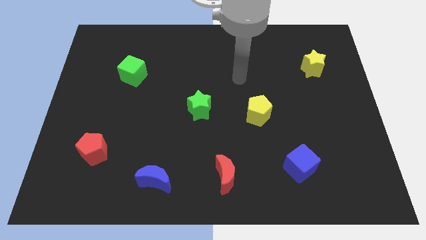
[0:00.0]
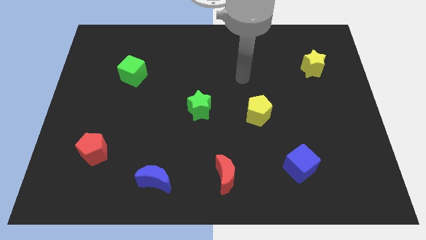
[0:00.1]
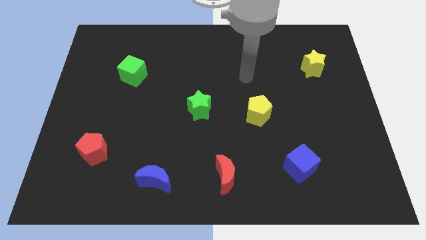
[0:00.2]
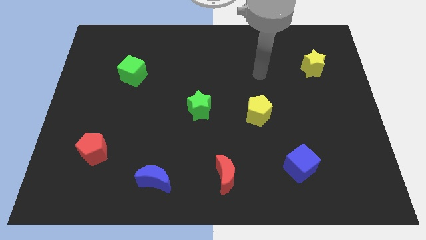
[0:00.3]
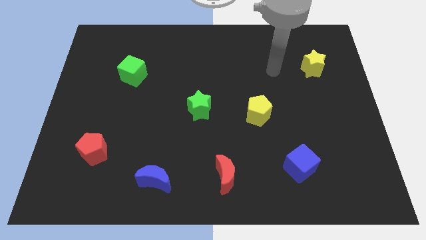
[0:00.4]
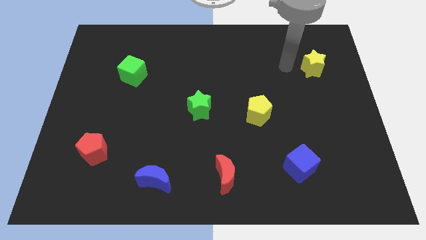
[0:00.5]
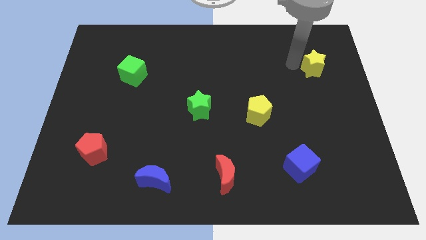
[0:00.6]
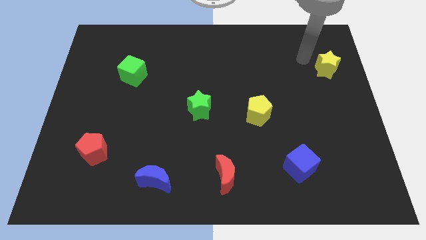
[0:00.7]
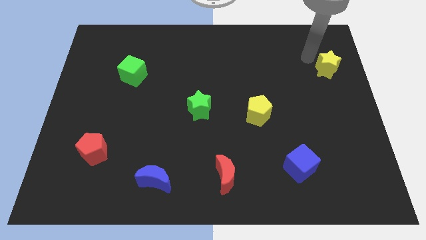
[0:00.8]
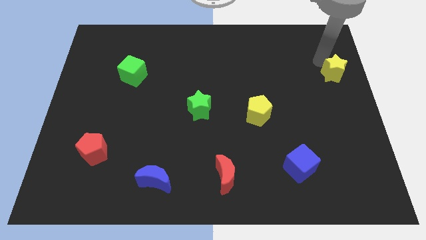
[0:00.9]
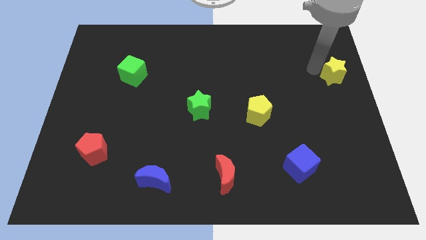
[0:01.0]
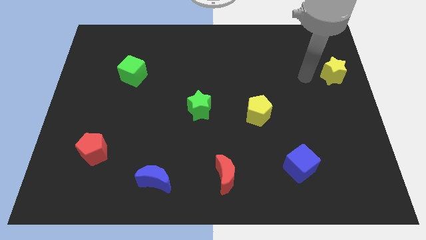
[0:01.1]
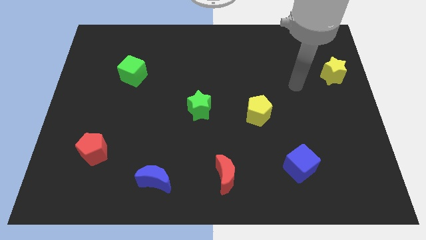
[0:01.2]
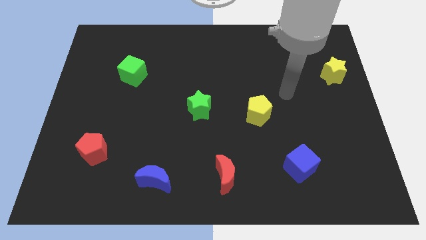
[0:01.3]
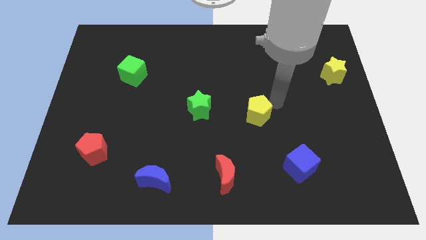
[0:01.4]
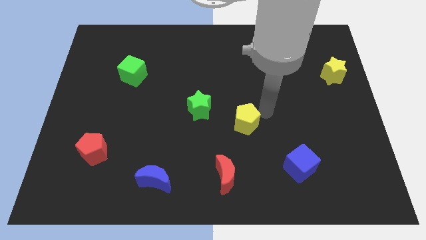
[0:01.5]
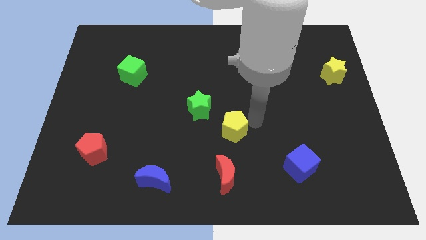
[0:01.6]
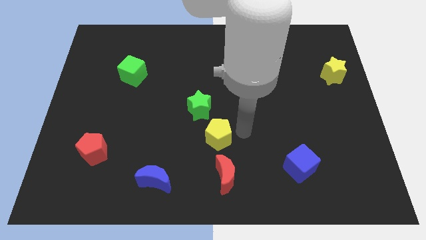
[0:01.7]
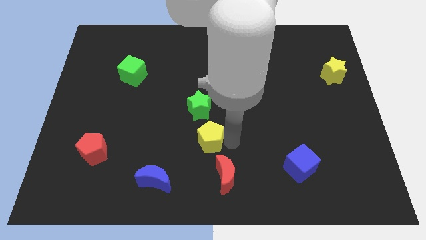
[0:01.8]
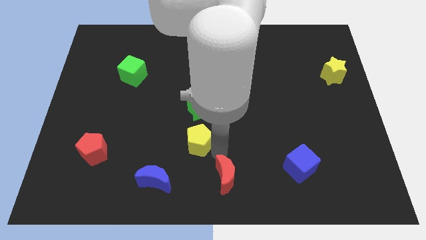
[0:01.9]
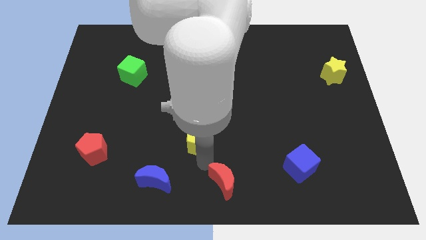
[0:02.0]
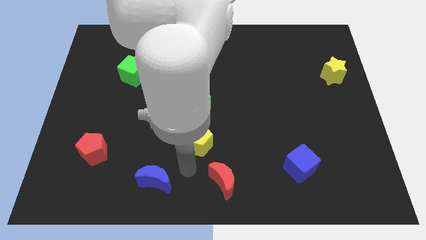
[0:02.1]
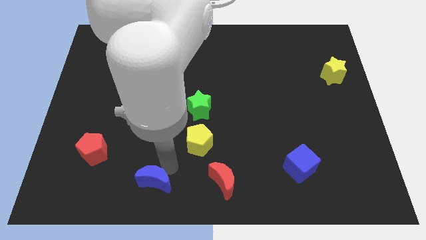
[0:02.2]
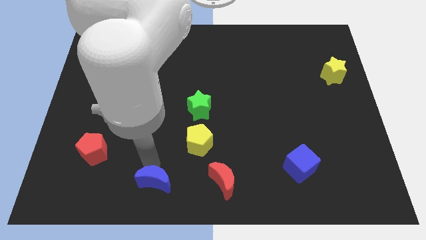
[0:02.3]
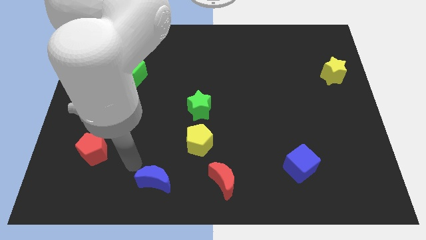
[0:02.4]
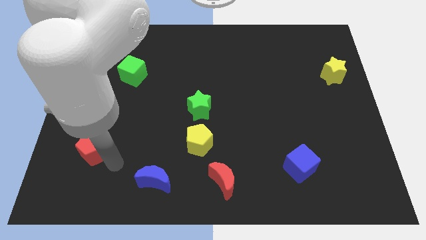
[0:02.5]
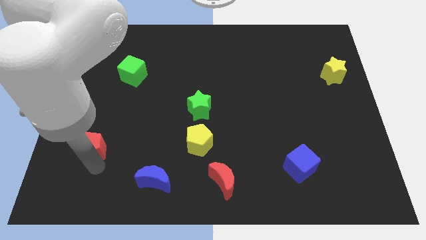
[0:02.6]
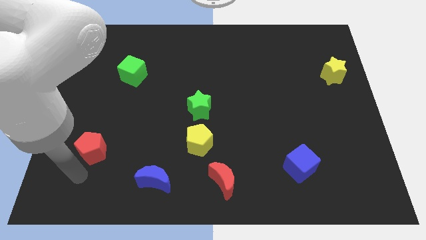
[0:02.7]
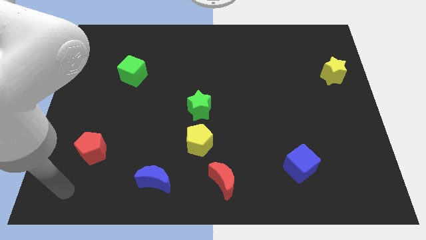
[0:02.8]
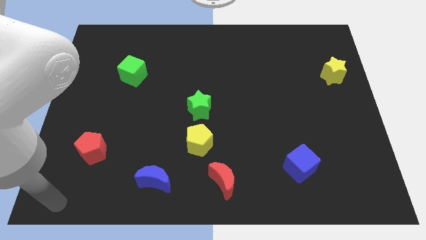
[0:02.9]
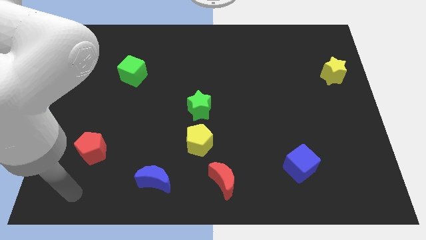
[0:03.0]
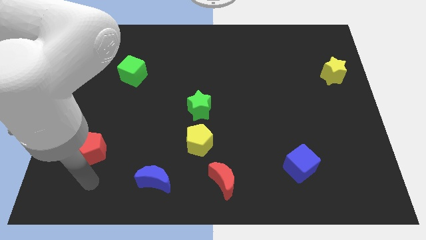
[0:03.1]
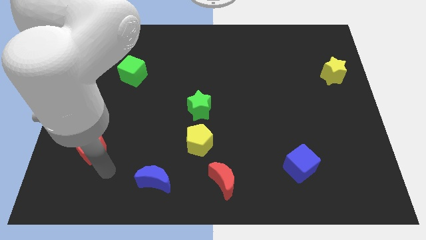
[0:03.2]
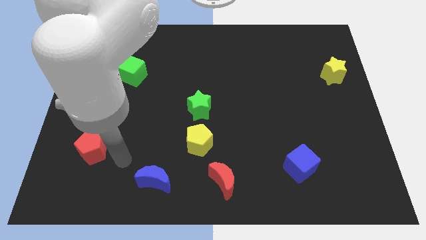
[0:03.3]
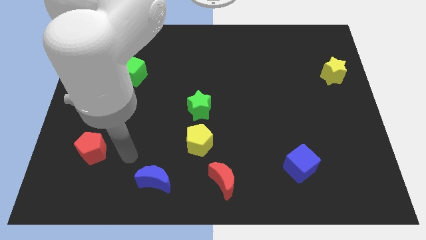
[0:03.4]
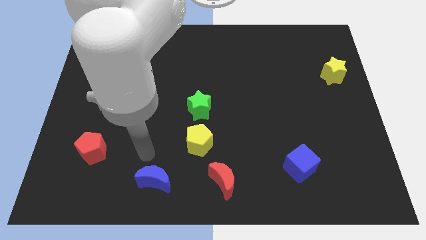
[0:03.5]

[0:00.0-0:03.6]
place the yellow pentagon at the bottom of the green star

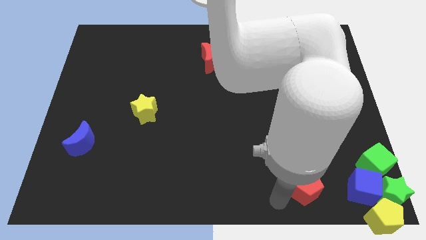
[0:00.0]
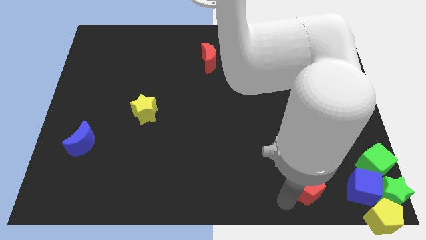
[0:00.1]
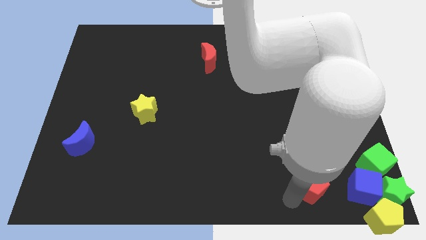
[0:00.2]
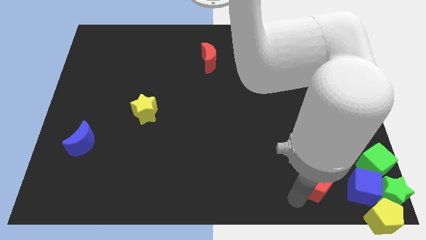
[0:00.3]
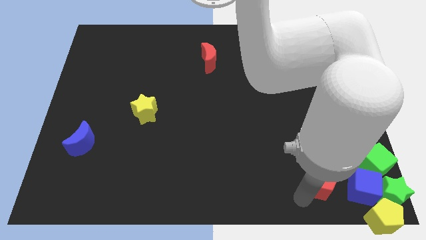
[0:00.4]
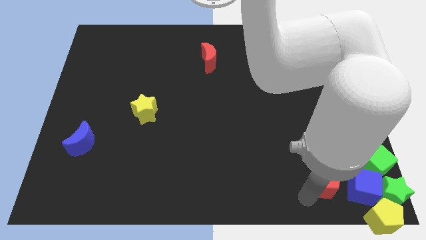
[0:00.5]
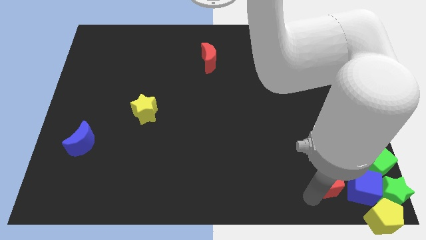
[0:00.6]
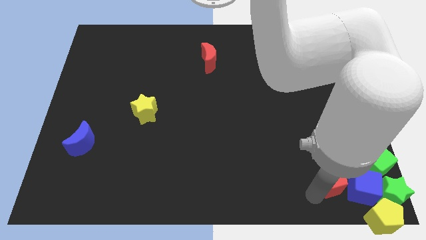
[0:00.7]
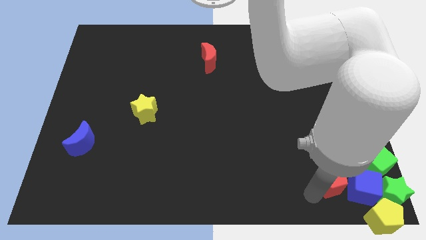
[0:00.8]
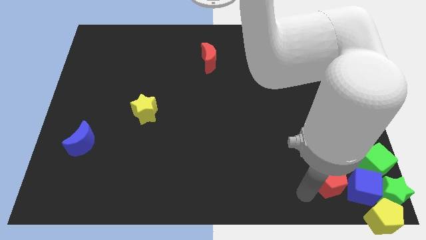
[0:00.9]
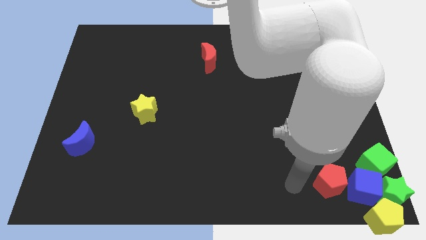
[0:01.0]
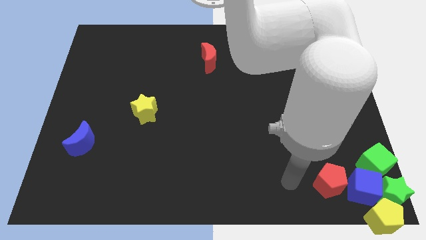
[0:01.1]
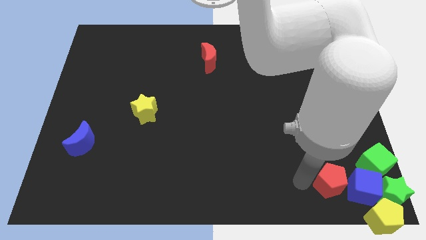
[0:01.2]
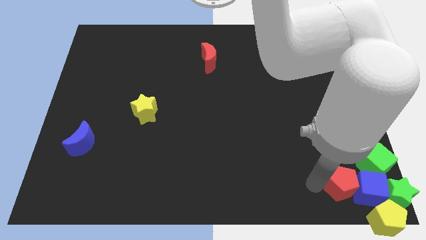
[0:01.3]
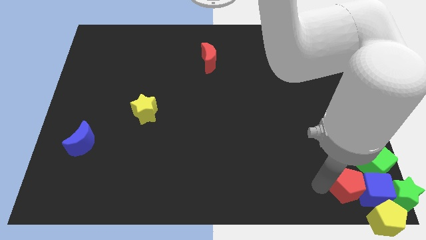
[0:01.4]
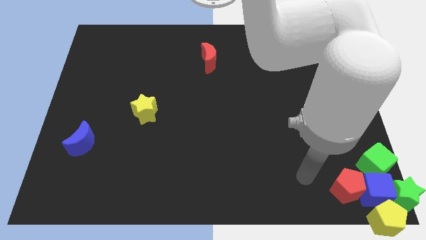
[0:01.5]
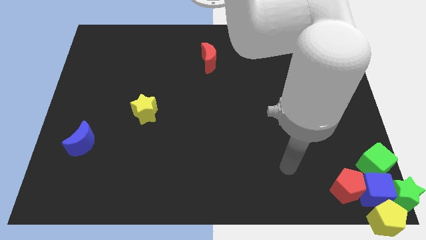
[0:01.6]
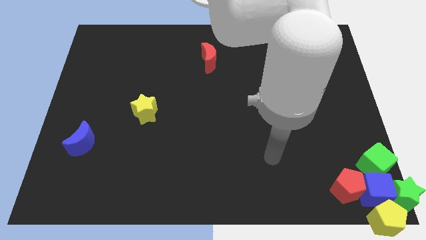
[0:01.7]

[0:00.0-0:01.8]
move the red pentagon to the left of the blue cube

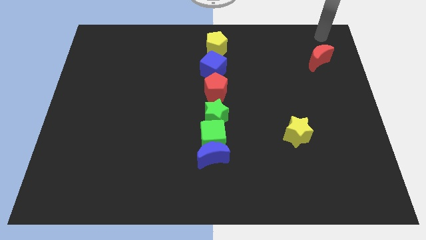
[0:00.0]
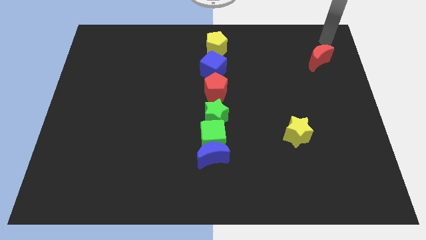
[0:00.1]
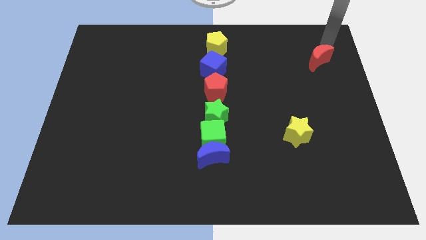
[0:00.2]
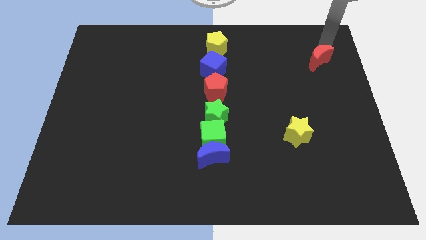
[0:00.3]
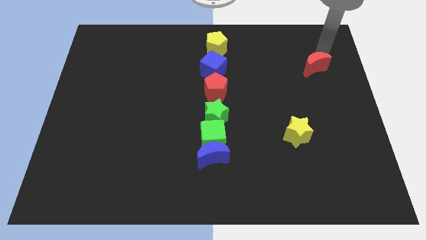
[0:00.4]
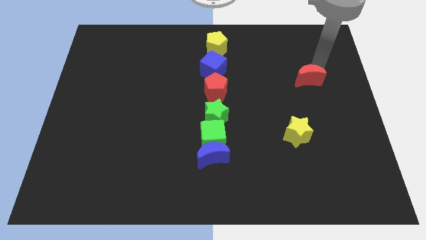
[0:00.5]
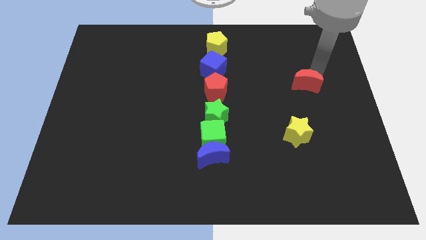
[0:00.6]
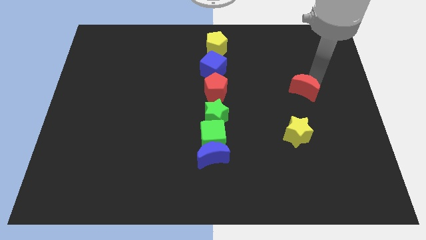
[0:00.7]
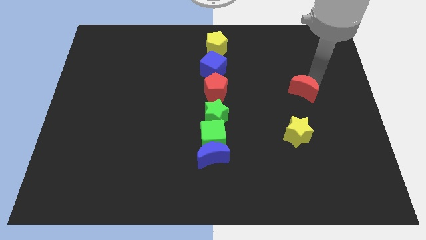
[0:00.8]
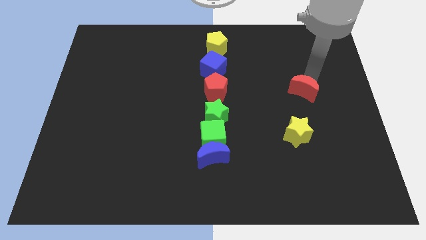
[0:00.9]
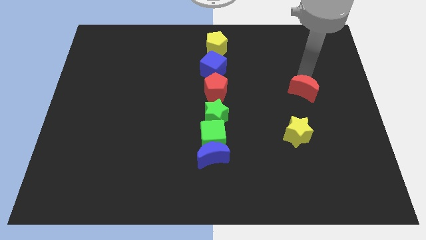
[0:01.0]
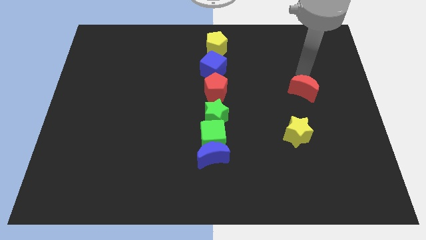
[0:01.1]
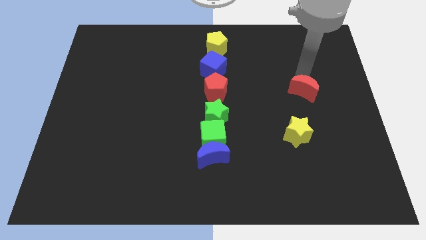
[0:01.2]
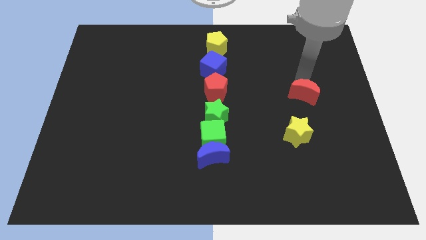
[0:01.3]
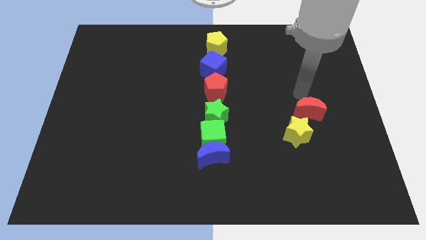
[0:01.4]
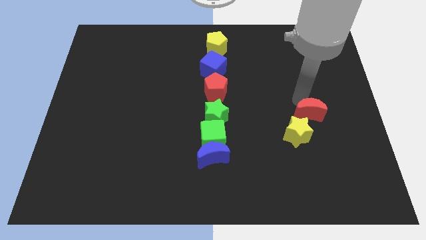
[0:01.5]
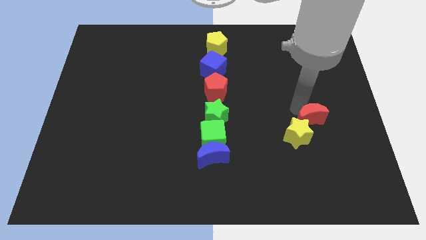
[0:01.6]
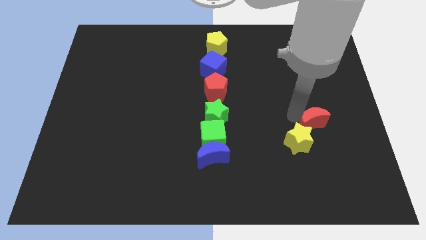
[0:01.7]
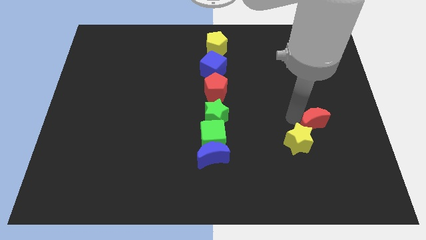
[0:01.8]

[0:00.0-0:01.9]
push the red crescent into yellow star

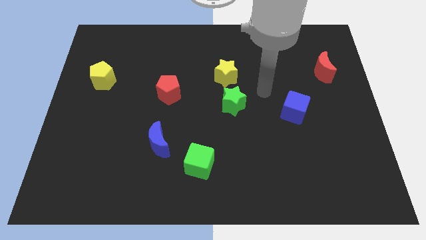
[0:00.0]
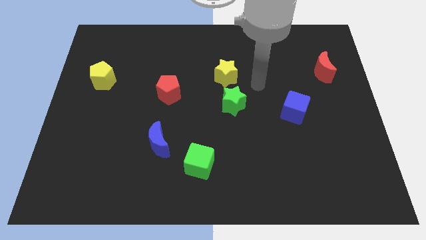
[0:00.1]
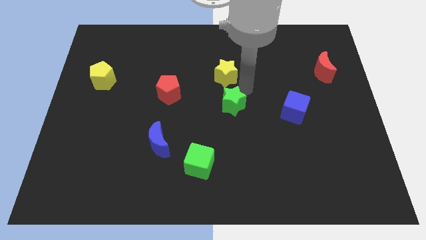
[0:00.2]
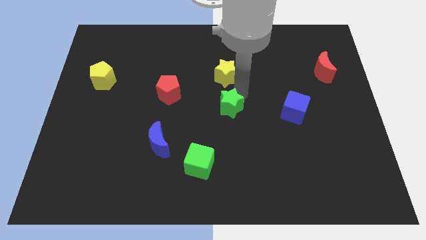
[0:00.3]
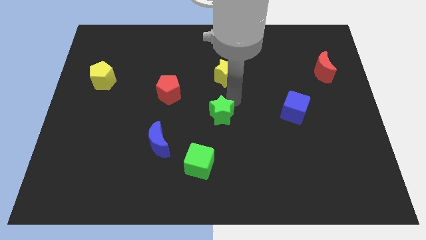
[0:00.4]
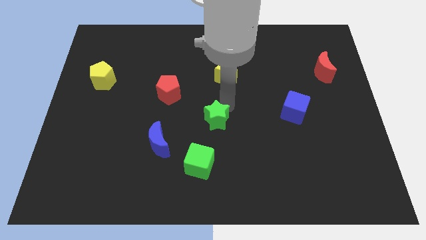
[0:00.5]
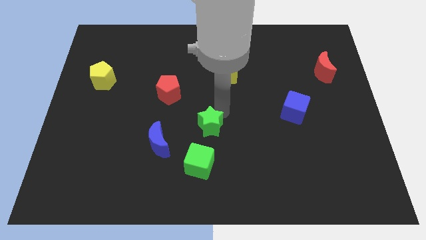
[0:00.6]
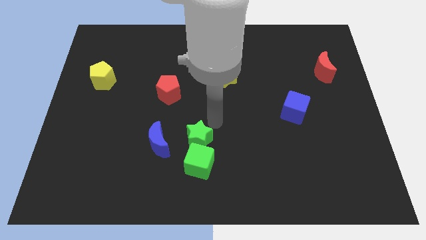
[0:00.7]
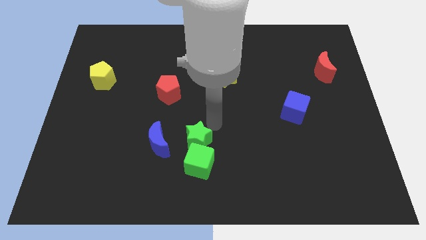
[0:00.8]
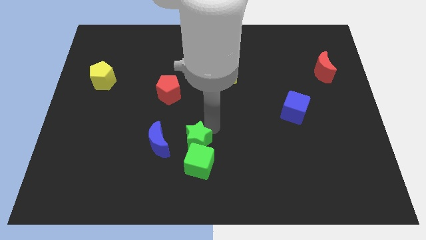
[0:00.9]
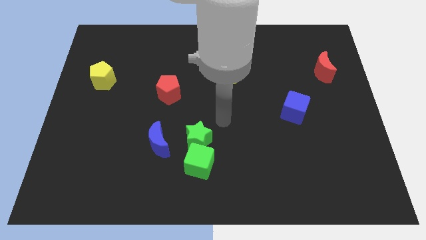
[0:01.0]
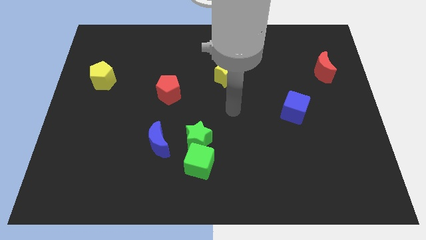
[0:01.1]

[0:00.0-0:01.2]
move green star above green cube

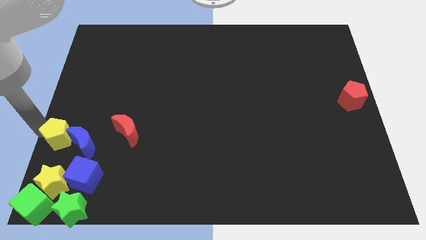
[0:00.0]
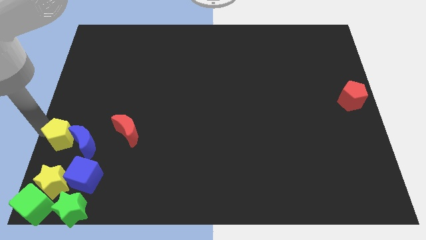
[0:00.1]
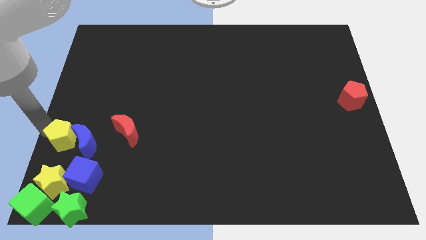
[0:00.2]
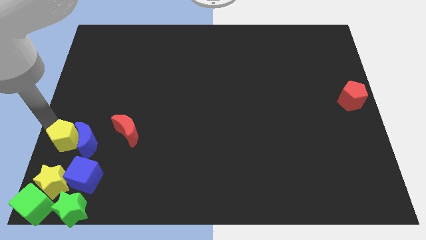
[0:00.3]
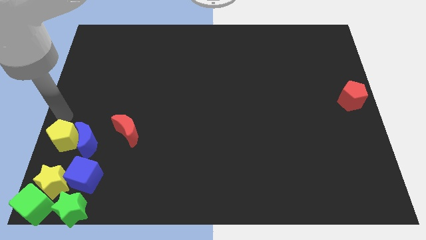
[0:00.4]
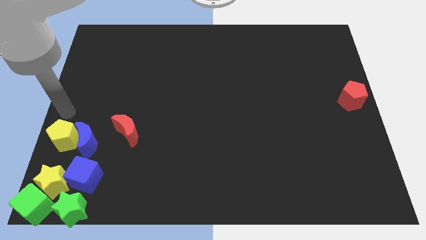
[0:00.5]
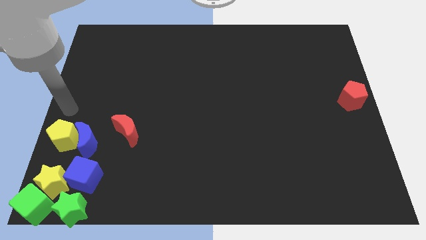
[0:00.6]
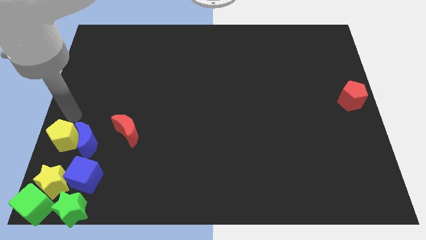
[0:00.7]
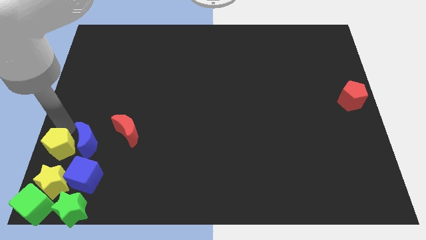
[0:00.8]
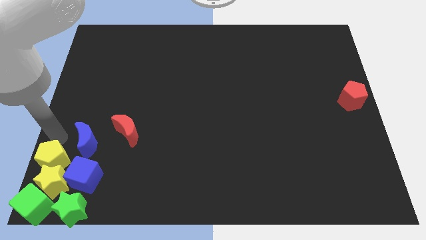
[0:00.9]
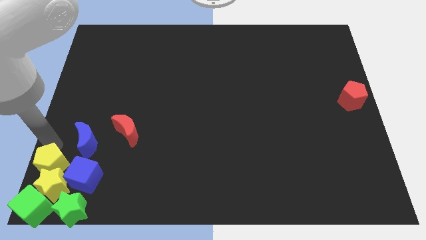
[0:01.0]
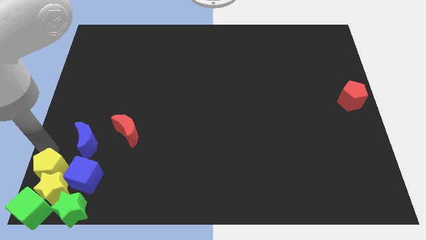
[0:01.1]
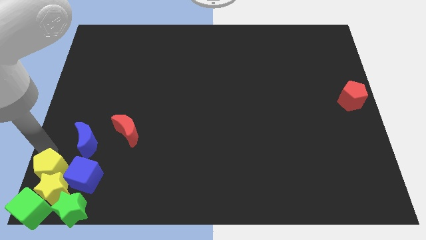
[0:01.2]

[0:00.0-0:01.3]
place yellow pentagon above the yellow star
